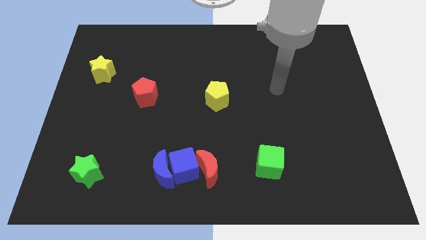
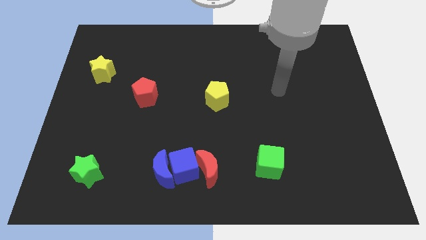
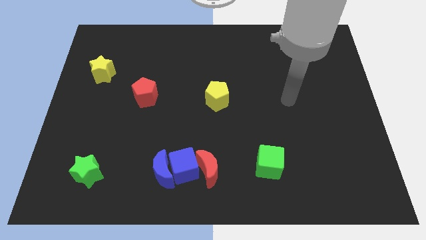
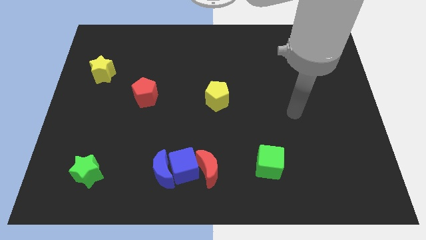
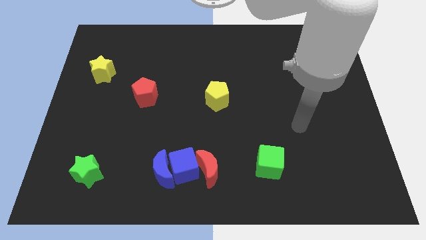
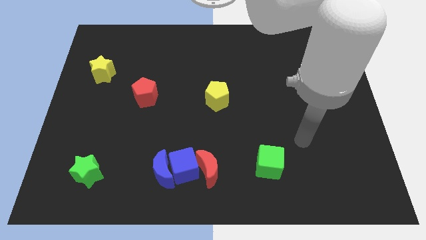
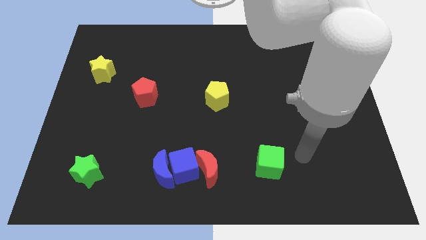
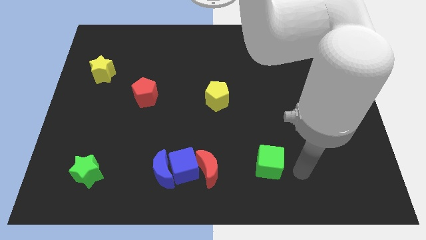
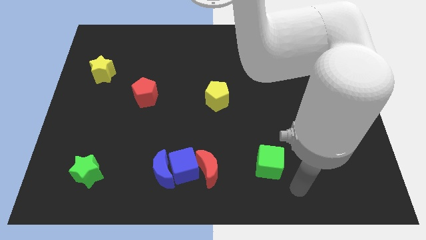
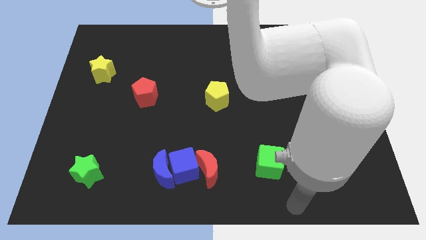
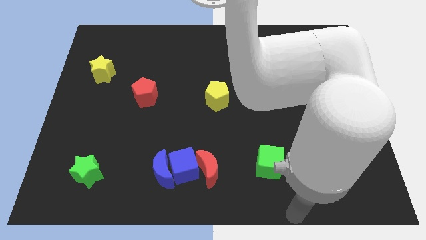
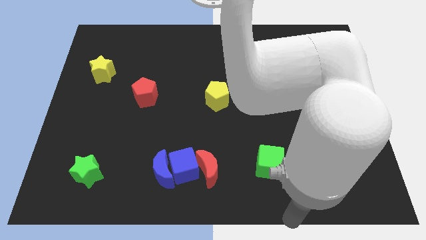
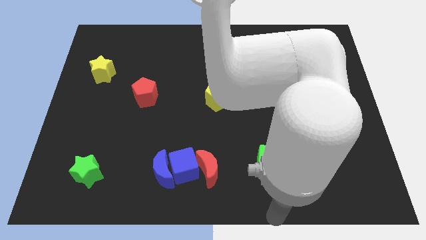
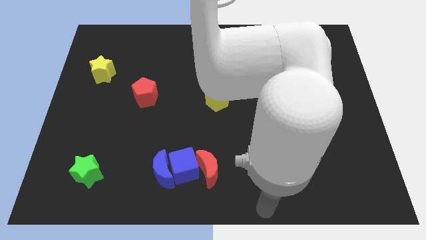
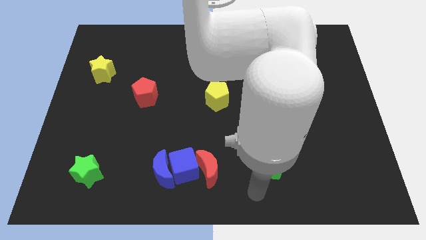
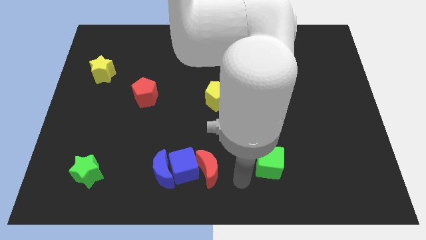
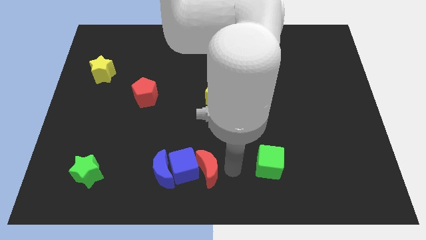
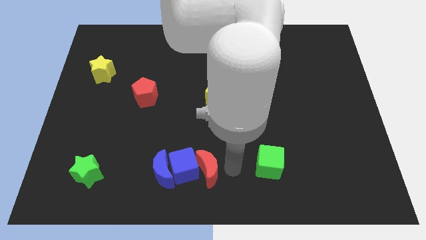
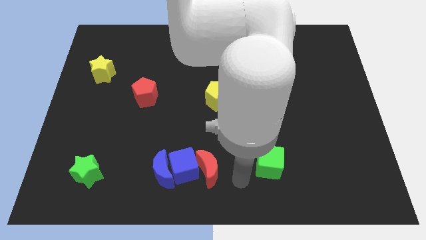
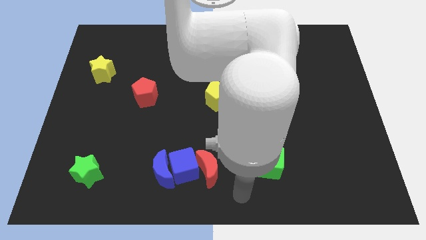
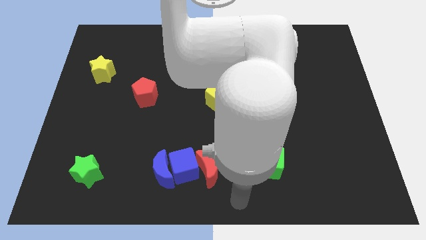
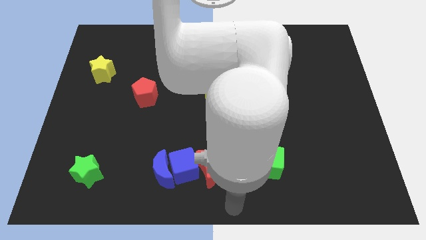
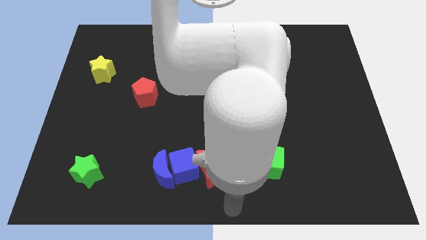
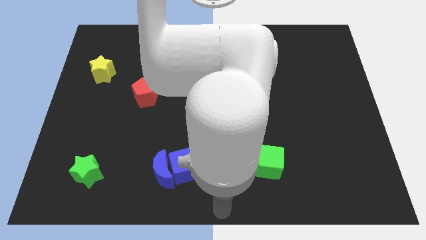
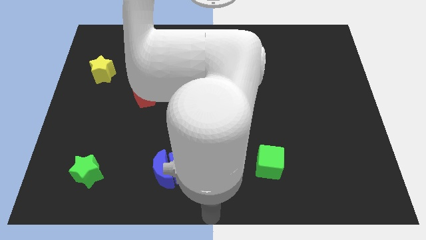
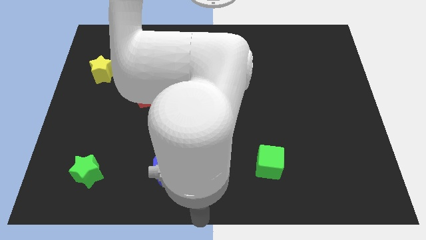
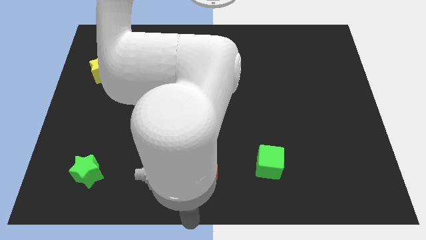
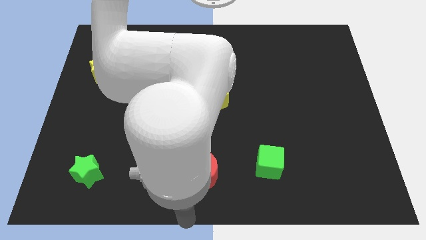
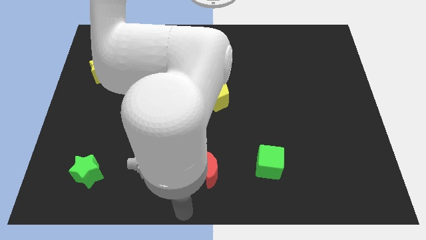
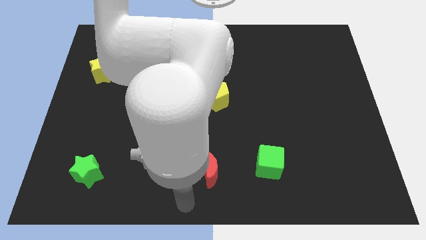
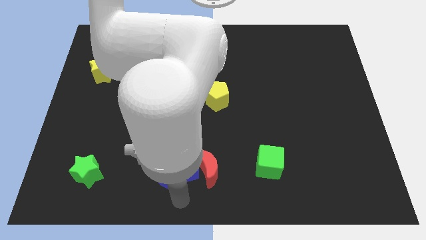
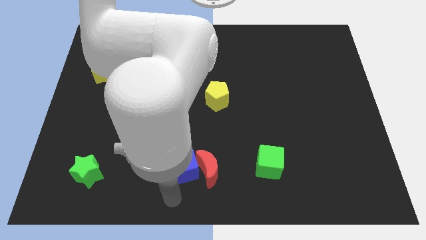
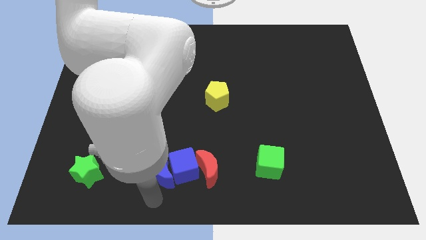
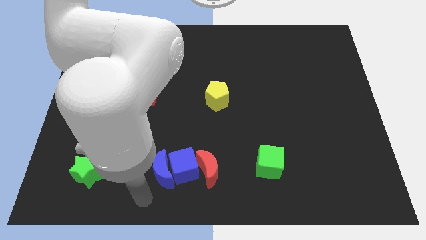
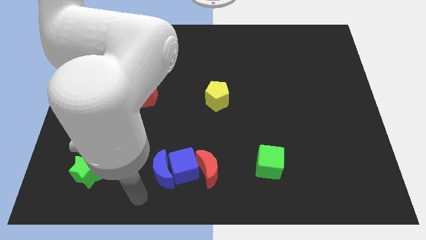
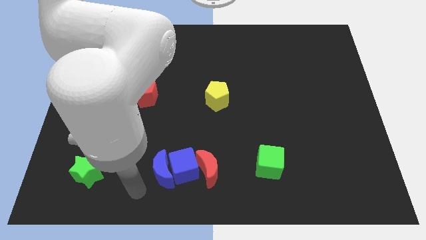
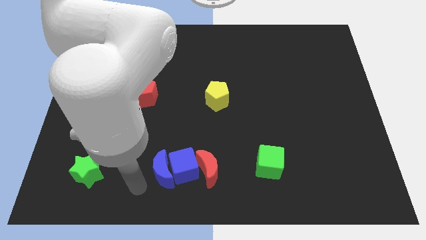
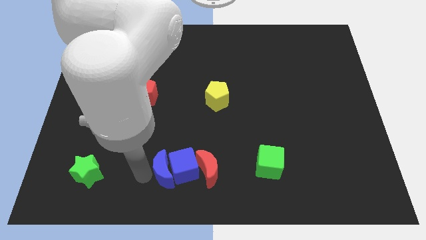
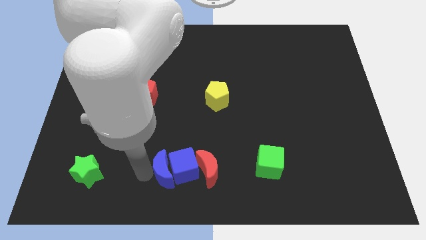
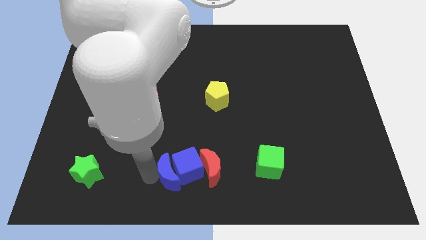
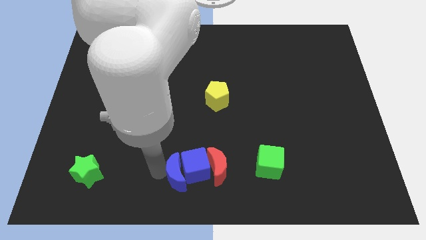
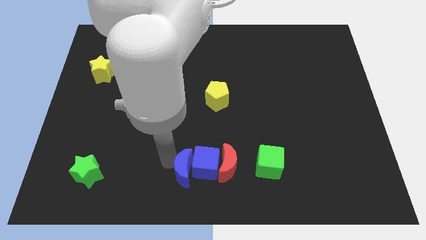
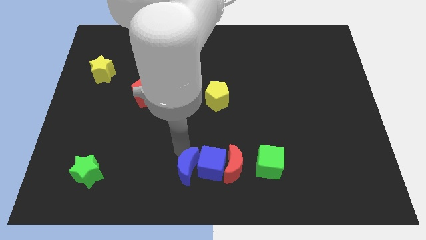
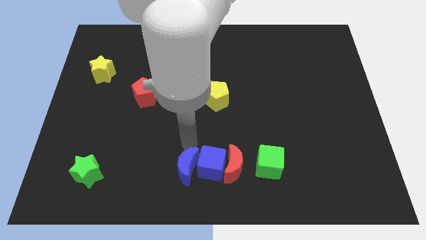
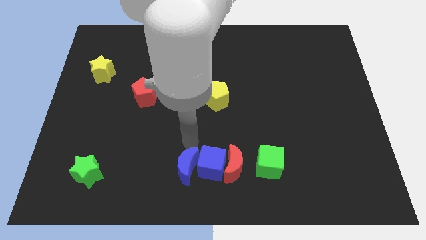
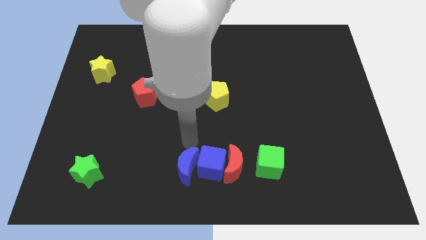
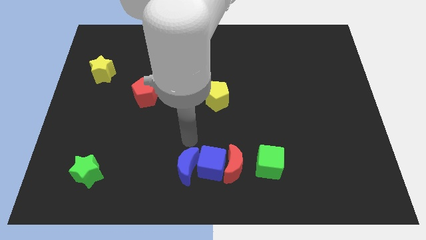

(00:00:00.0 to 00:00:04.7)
push the blue moon towards the right side of the board

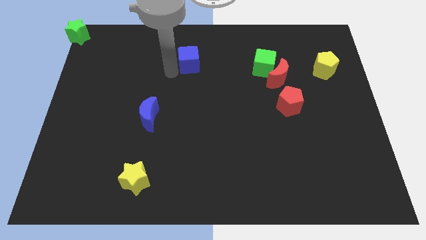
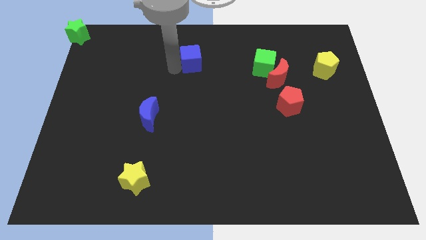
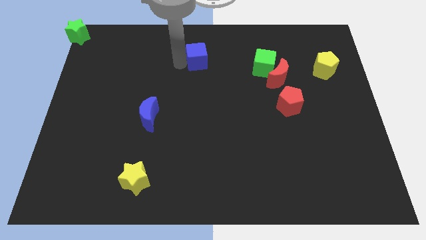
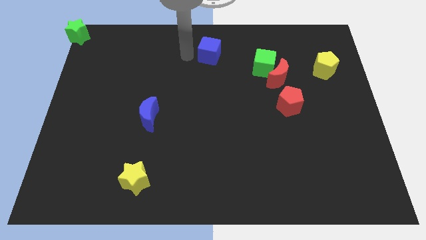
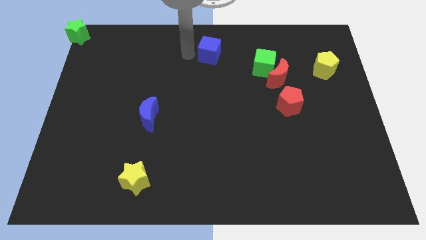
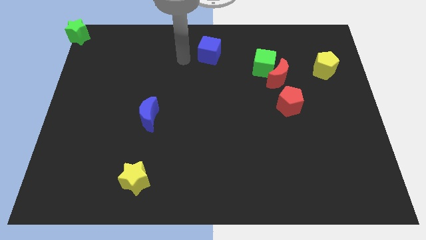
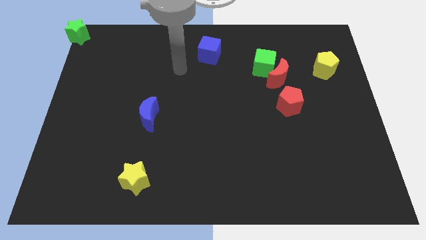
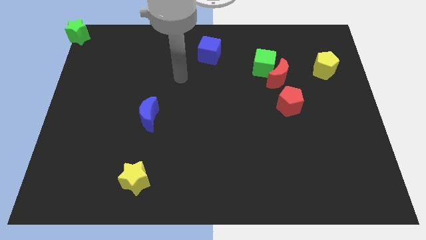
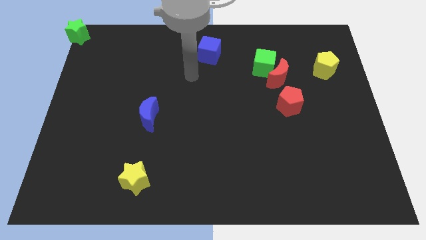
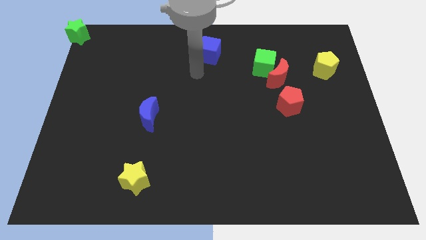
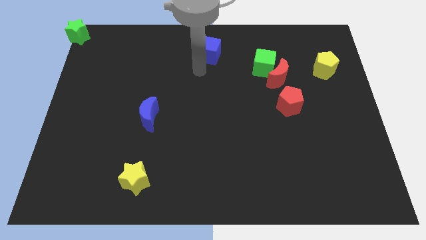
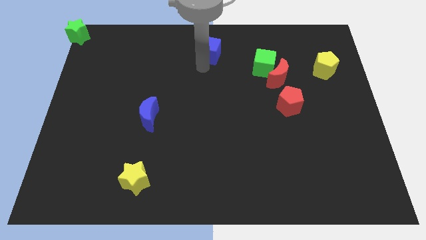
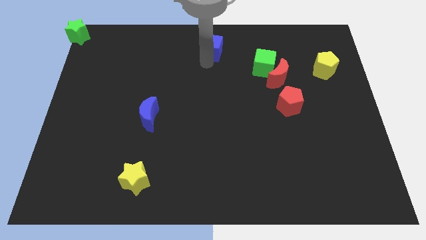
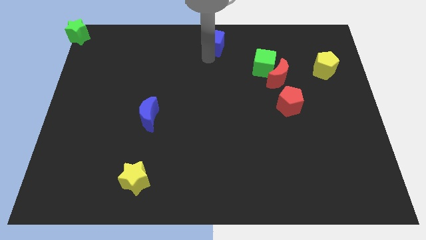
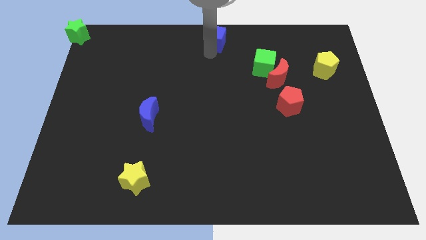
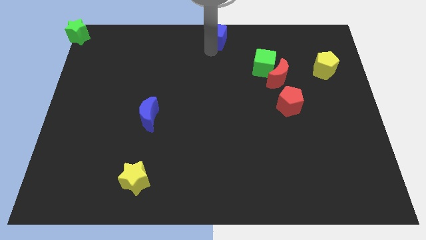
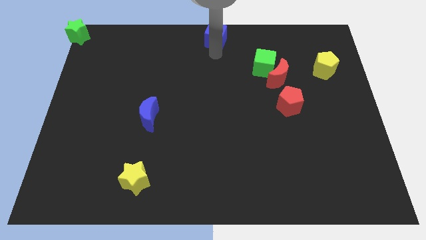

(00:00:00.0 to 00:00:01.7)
push the blue cube to the top center of the board

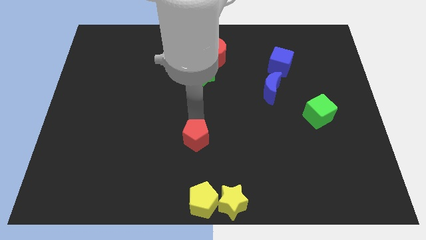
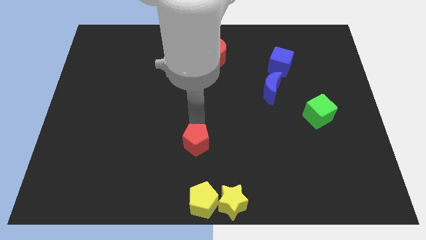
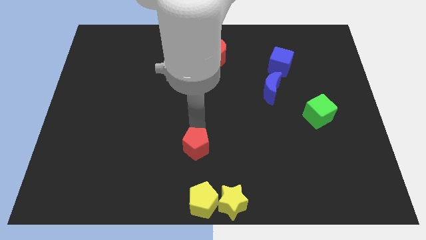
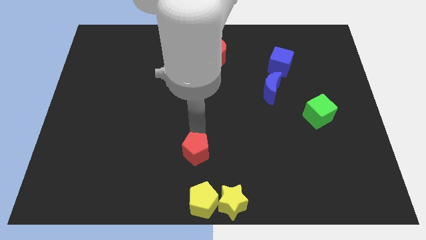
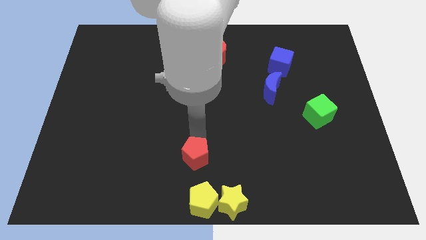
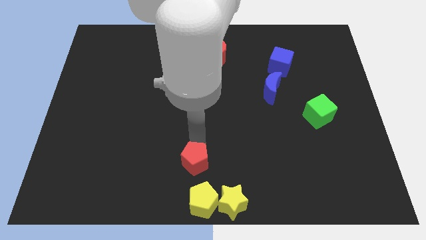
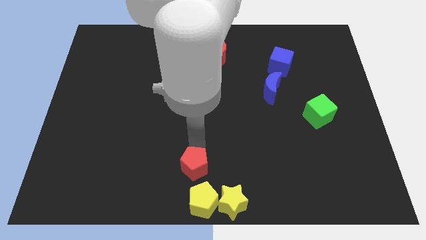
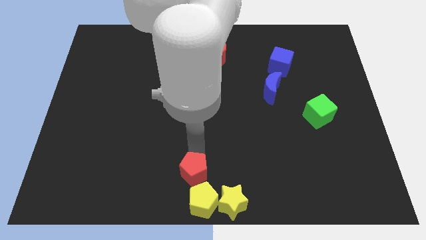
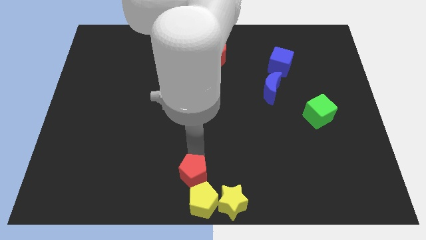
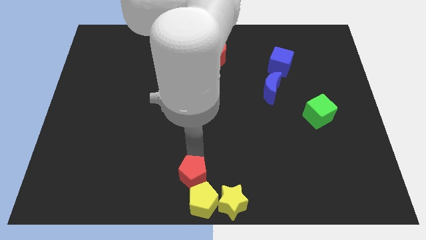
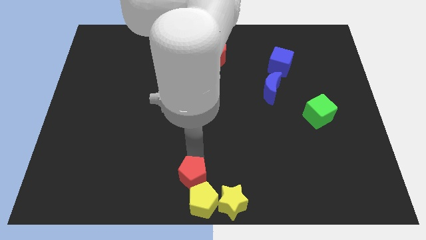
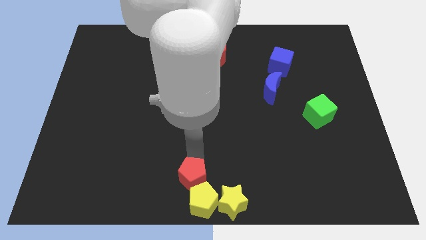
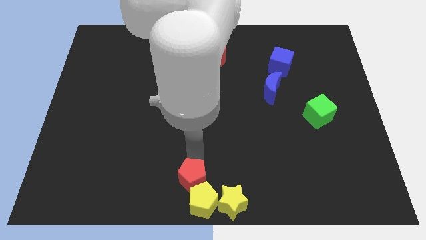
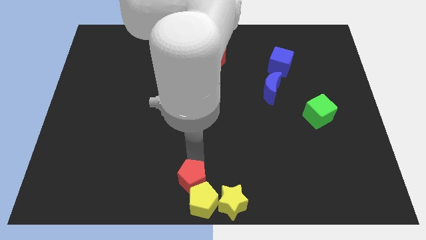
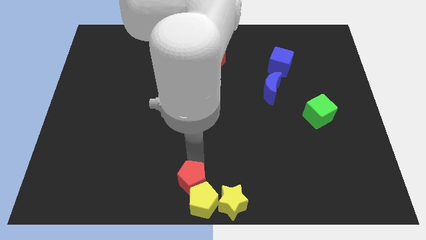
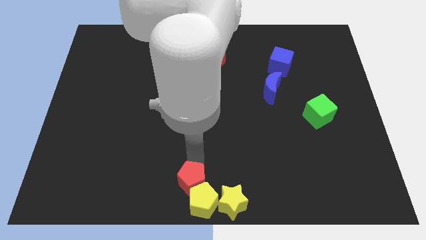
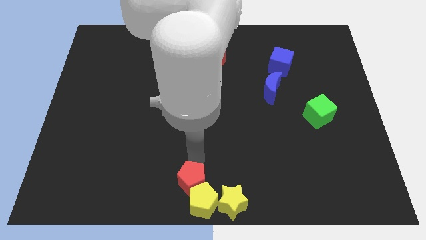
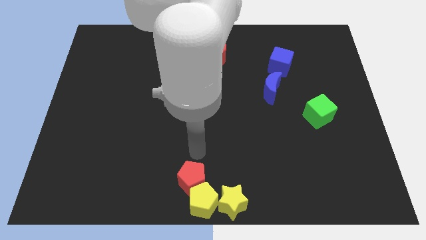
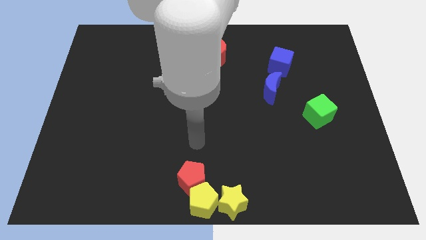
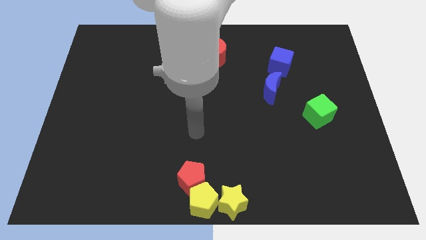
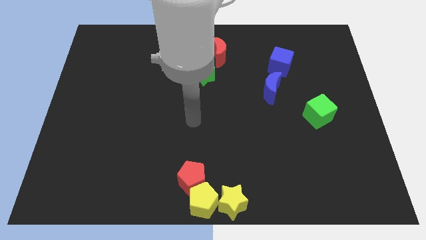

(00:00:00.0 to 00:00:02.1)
push the red pentagon into yellow pentagon

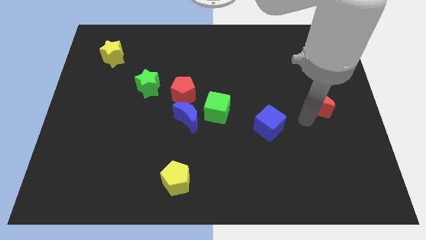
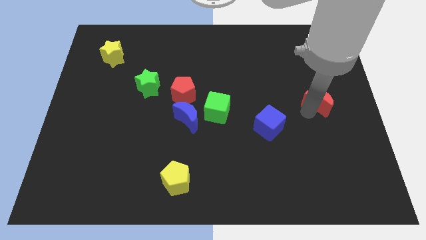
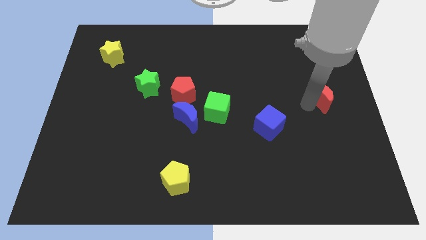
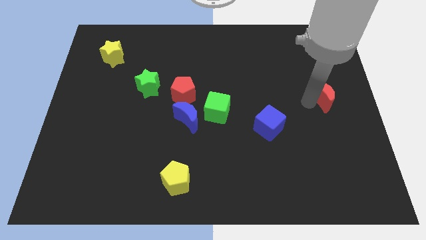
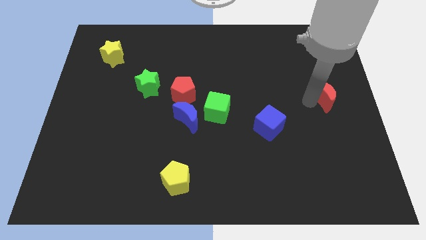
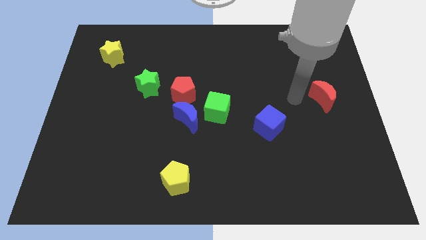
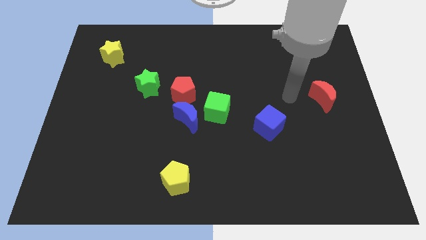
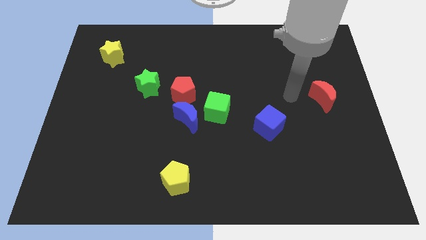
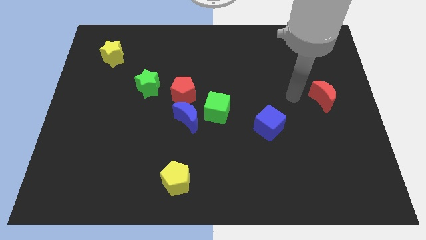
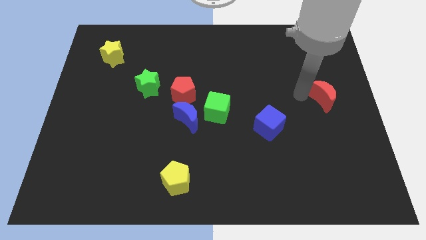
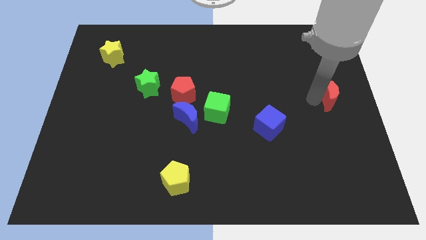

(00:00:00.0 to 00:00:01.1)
move the red crescent slightly right side to the board
